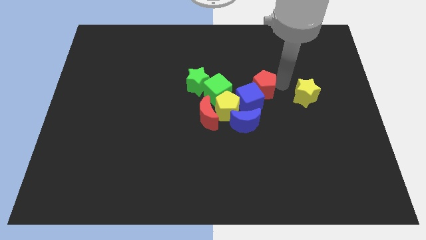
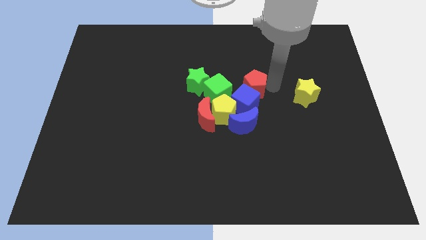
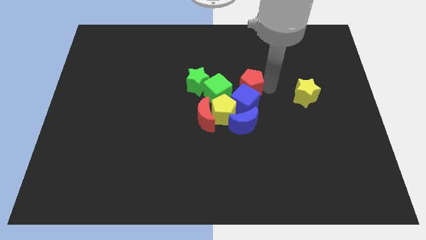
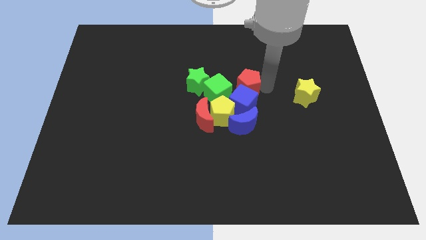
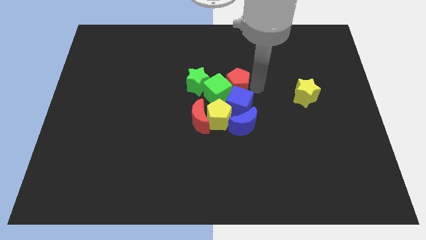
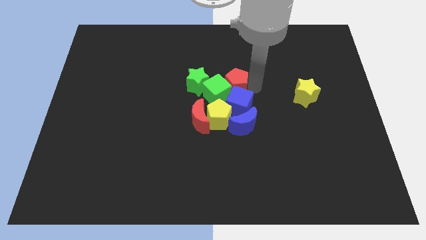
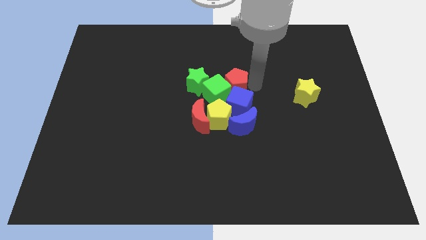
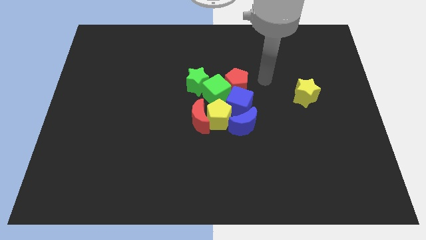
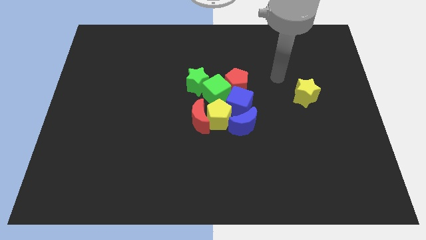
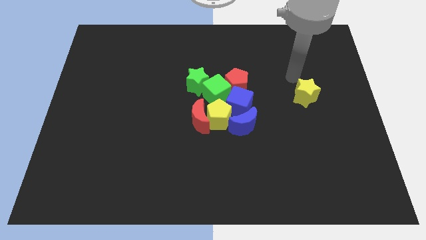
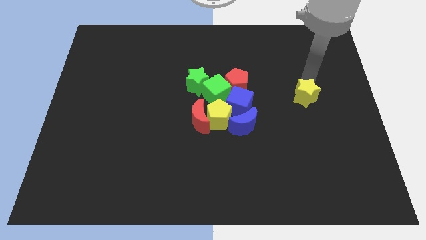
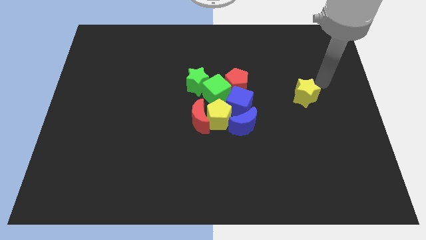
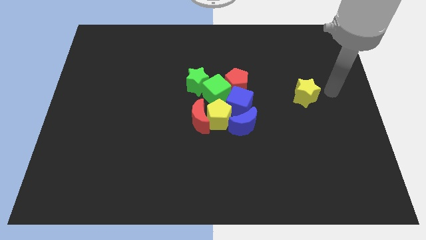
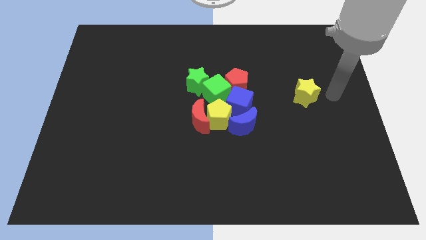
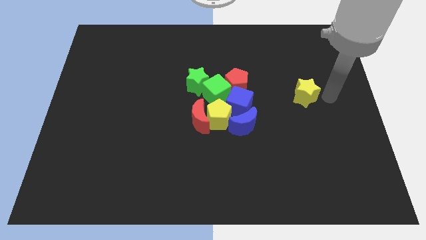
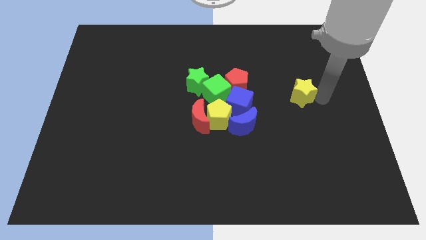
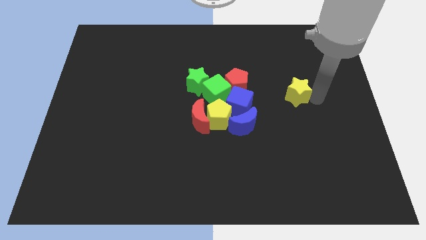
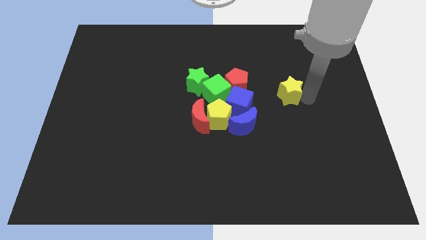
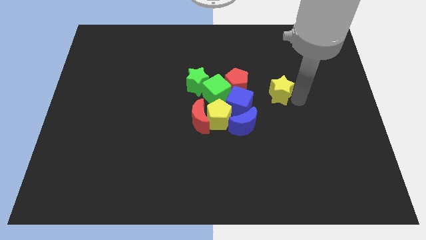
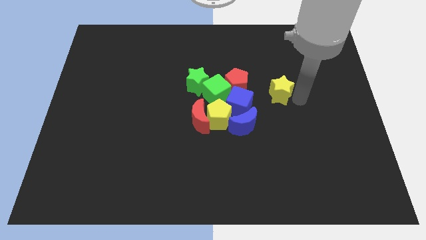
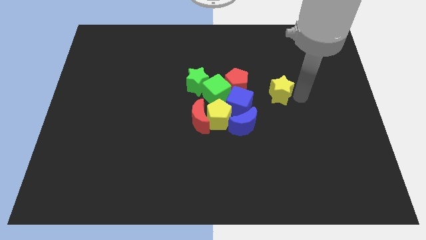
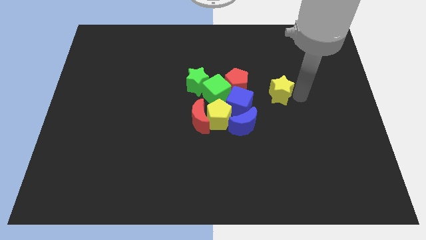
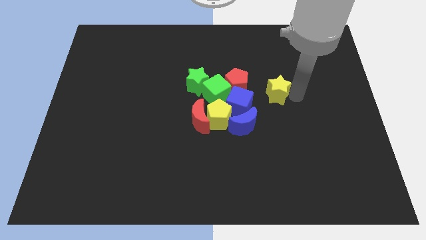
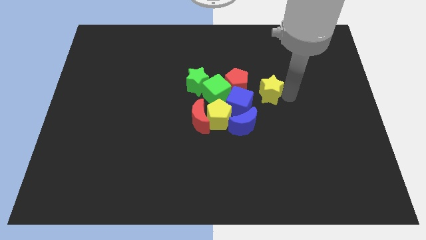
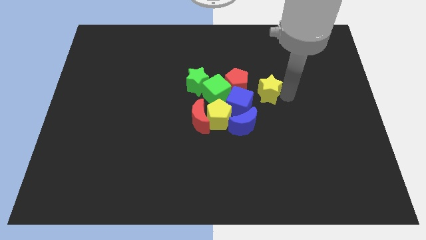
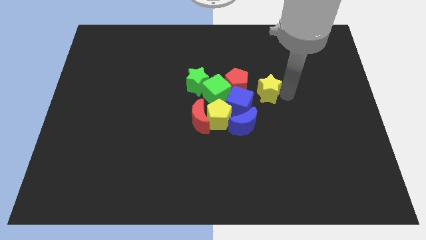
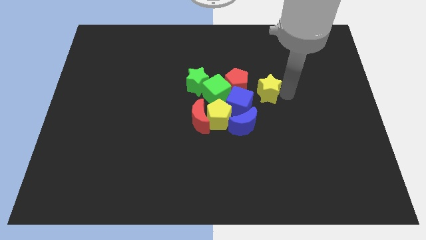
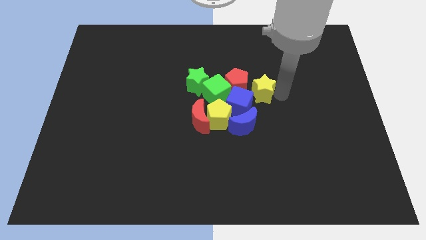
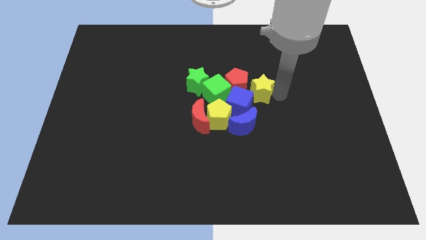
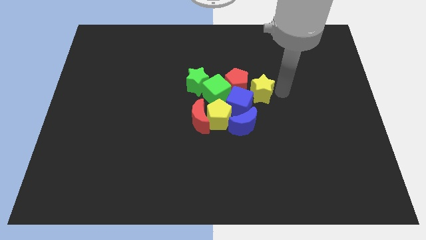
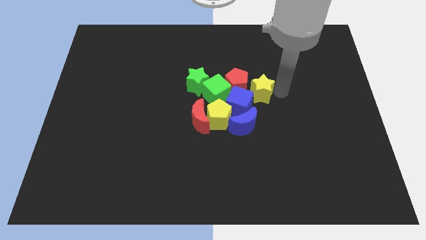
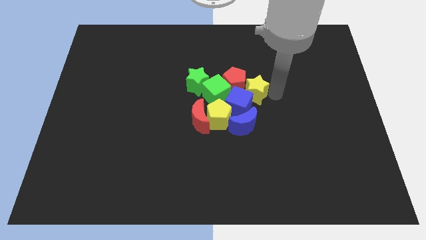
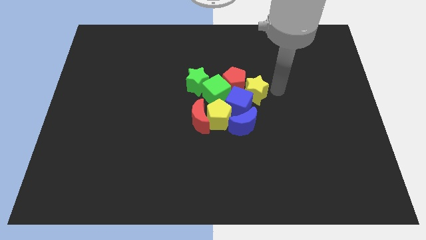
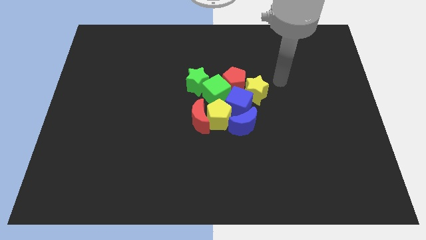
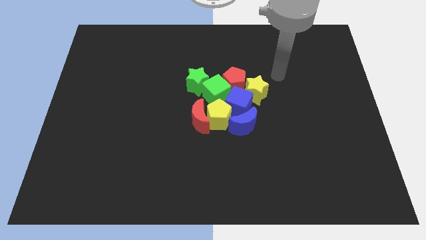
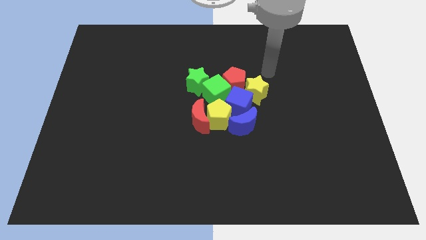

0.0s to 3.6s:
place the yellow star into the group of blocks

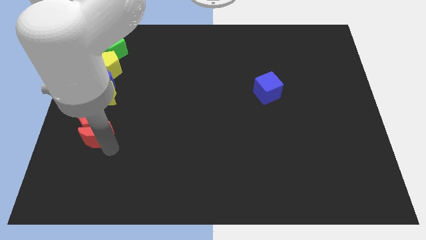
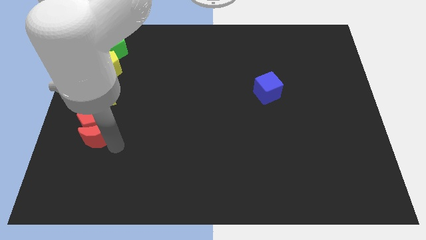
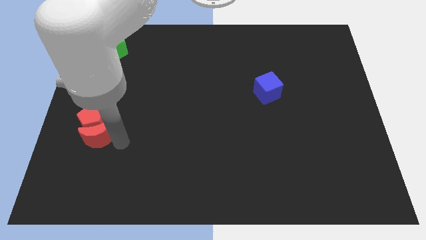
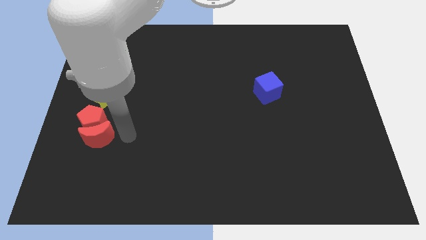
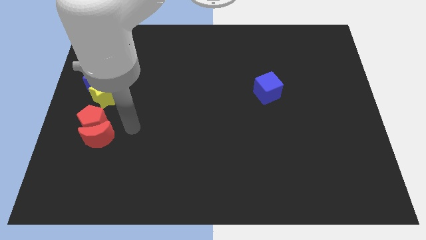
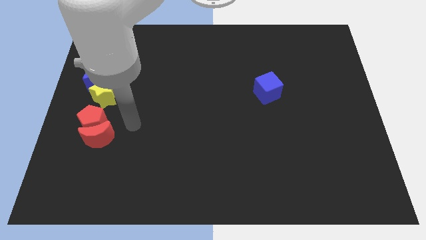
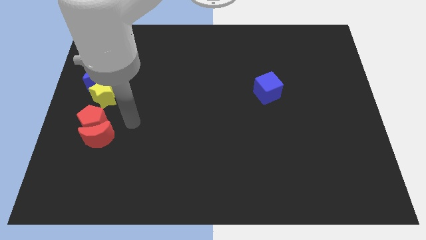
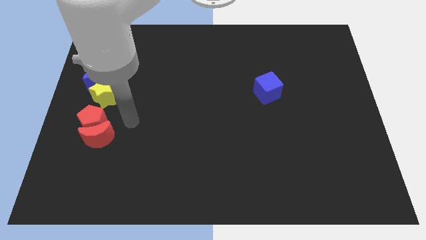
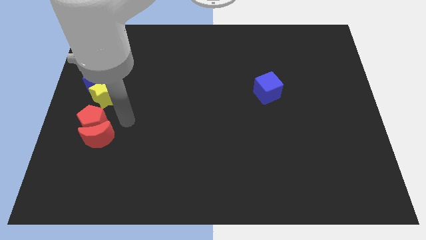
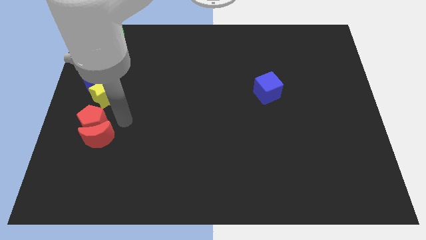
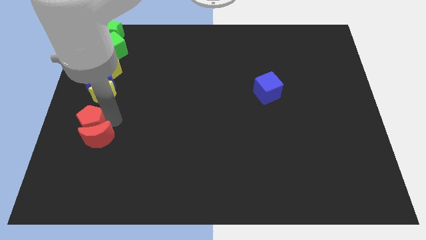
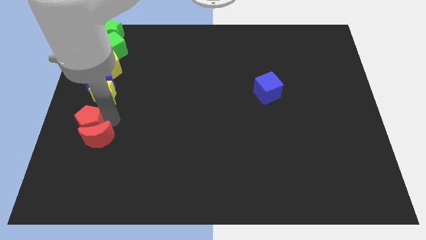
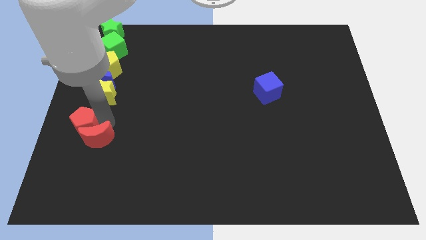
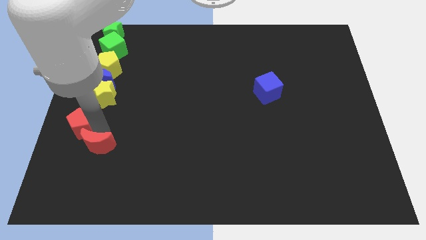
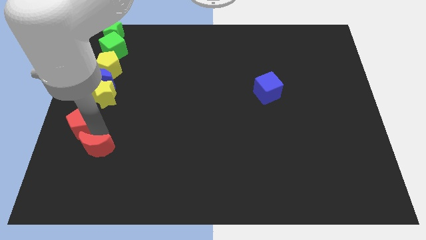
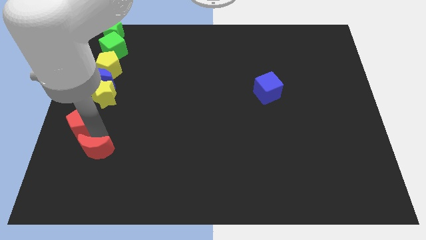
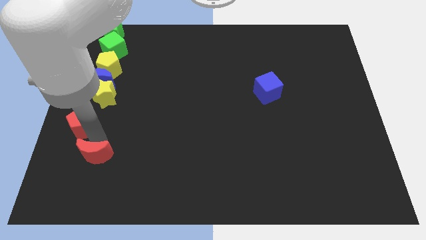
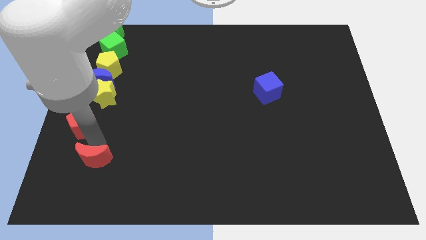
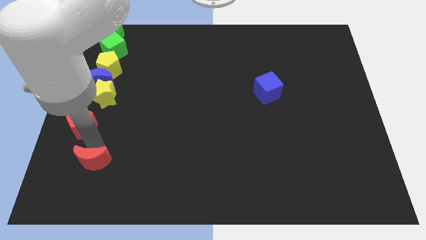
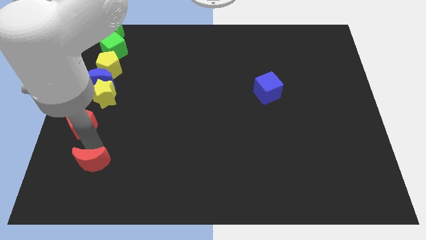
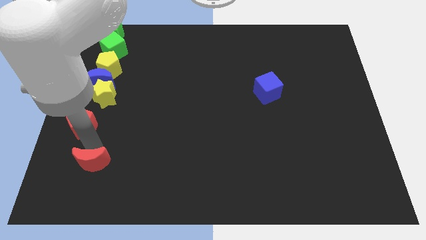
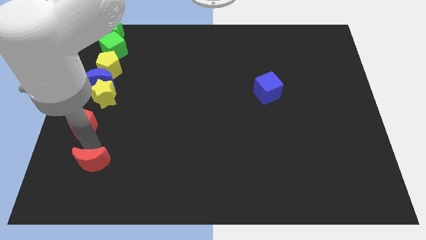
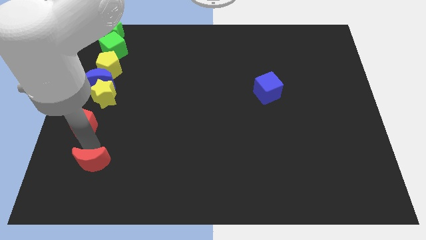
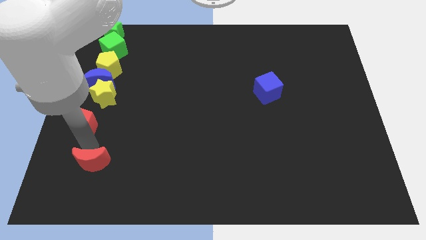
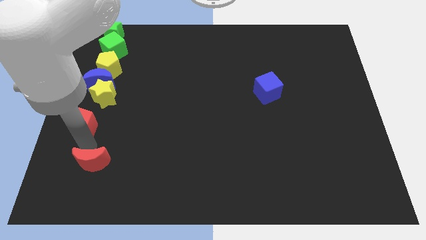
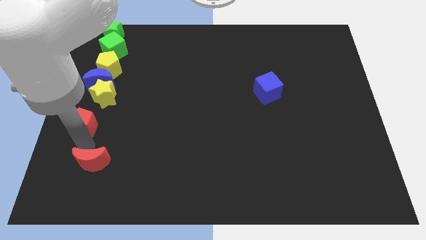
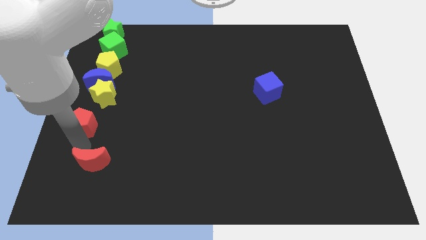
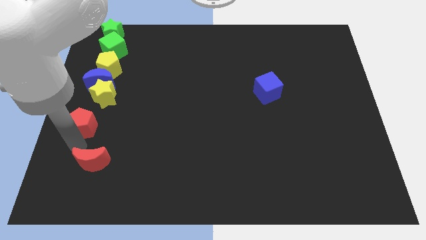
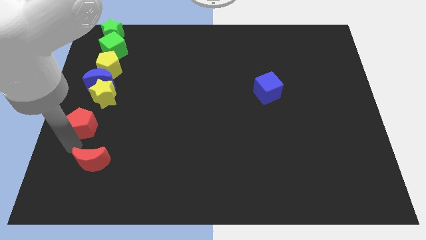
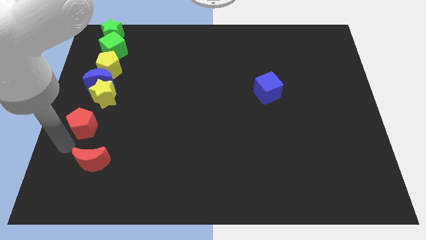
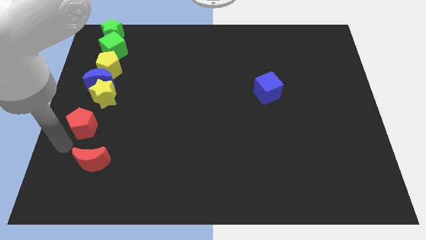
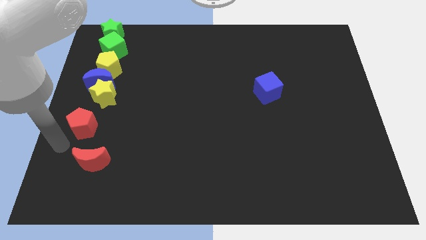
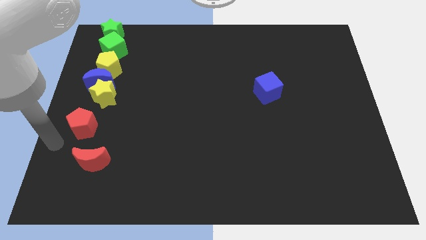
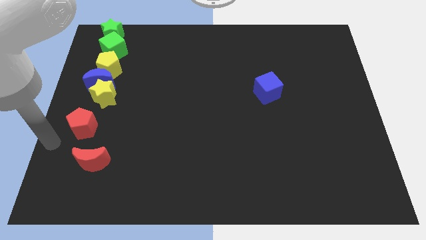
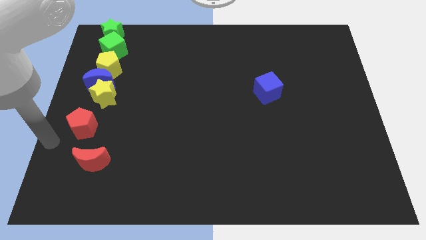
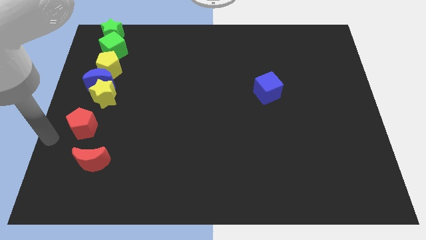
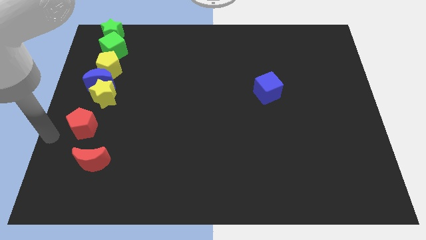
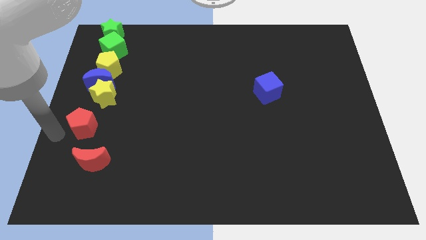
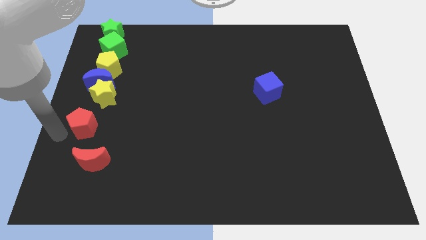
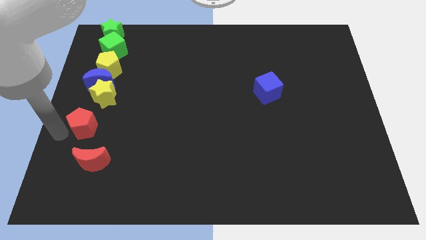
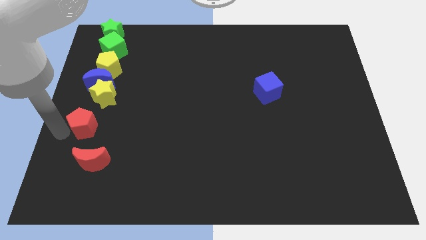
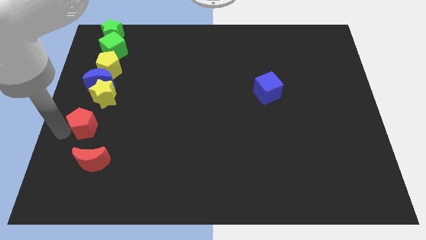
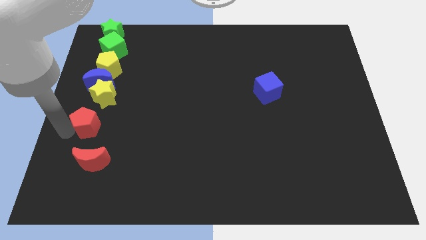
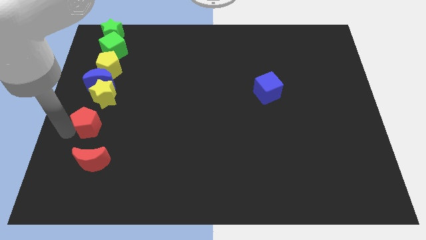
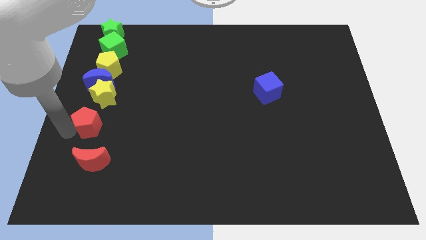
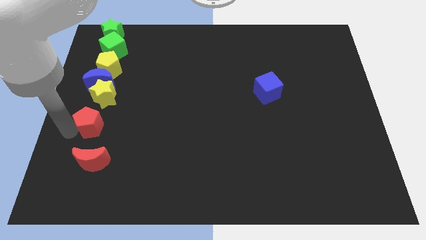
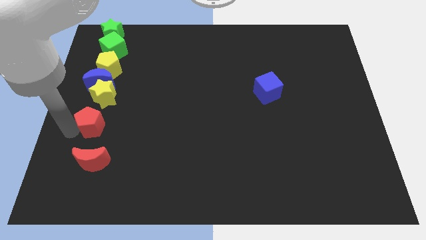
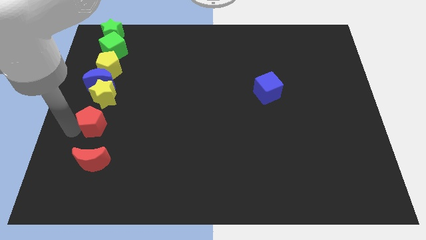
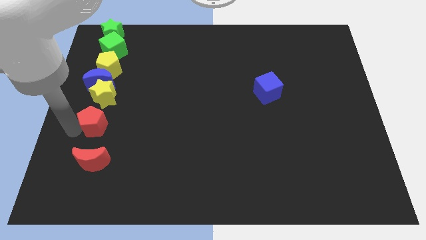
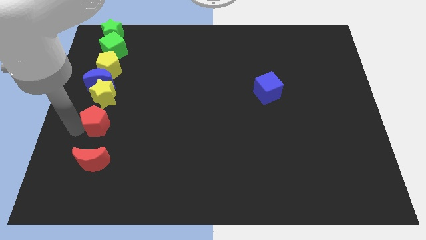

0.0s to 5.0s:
place the red blocks vertically below the yellow star

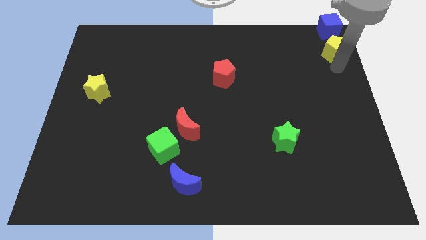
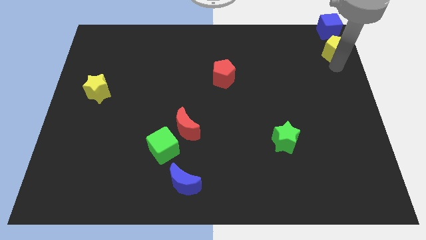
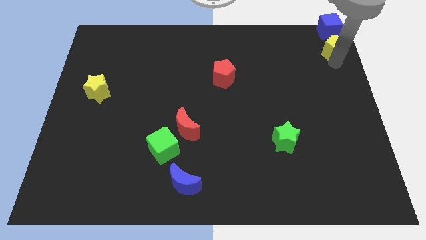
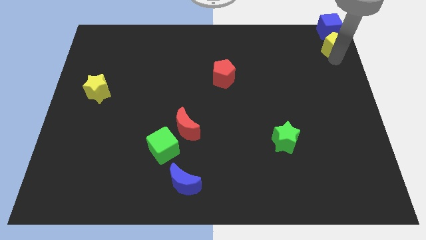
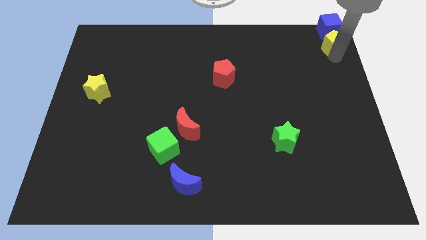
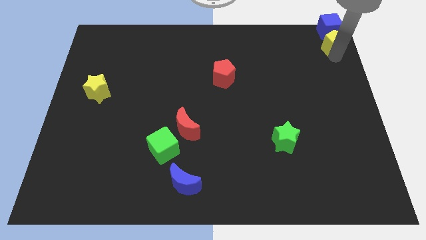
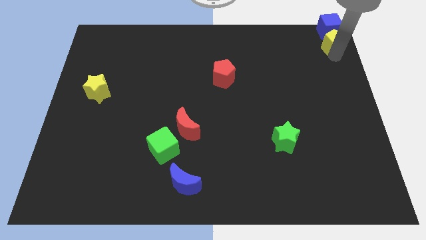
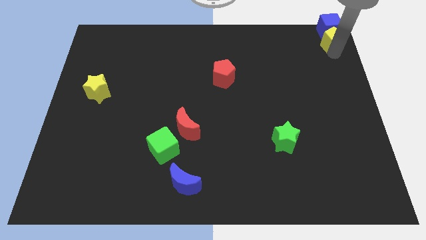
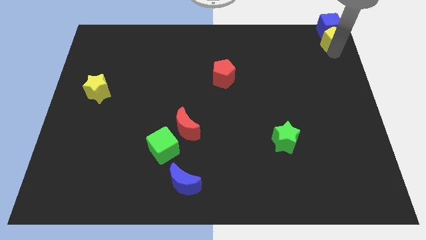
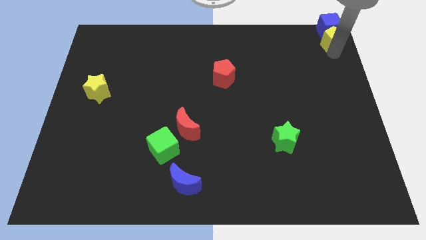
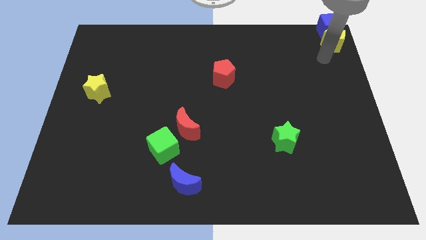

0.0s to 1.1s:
put the yellow pentagon at the bottom of the blue cube
